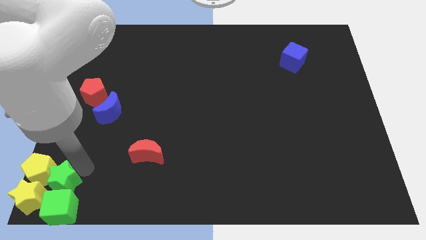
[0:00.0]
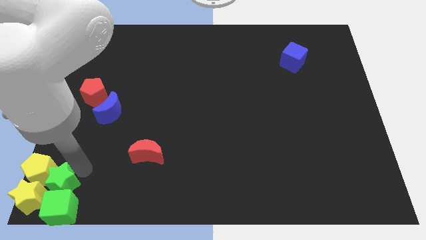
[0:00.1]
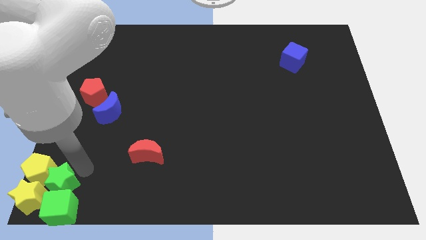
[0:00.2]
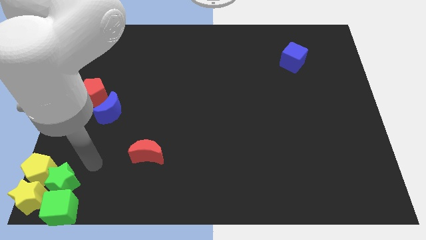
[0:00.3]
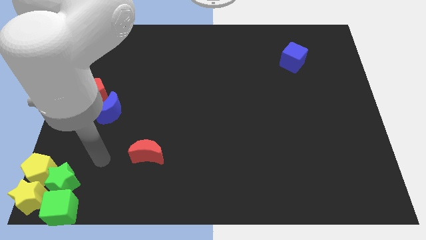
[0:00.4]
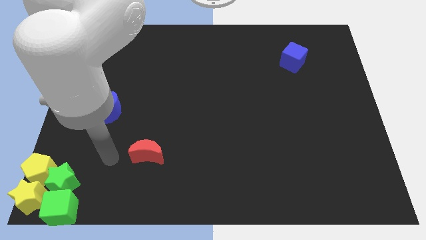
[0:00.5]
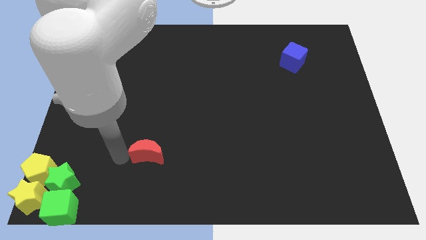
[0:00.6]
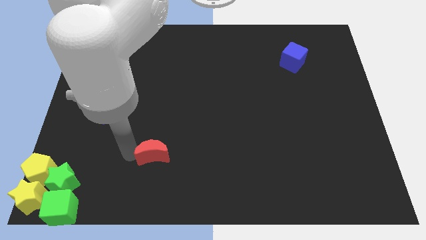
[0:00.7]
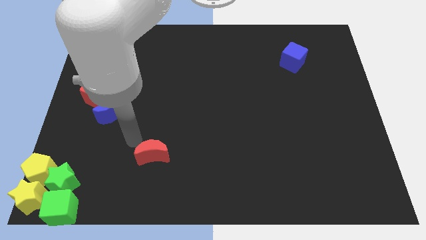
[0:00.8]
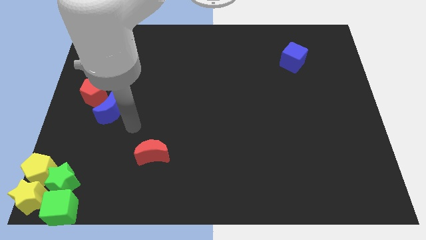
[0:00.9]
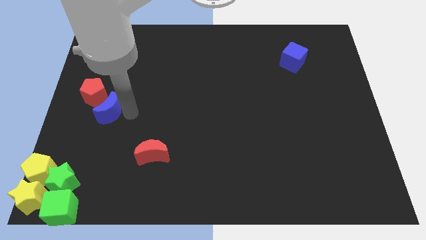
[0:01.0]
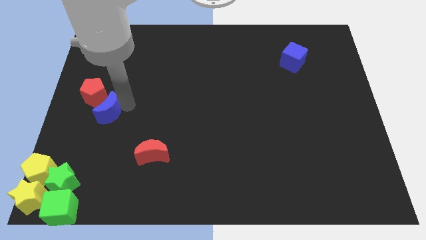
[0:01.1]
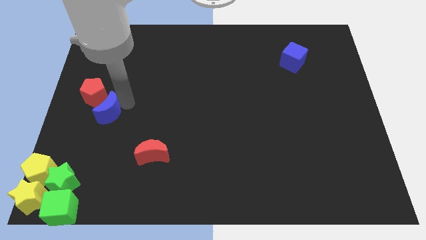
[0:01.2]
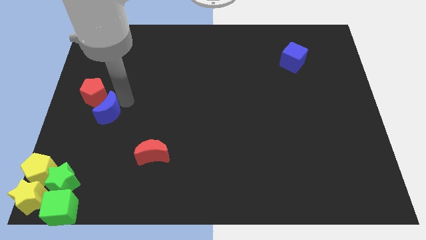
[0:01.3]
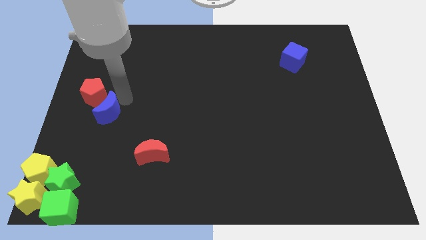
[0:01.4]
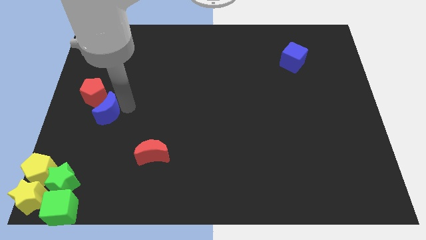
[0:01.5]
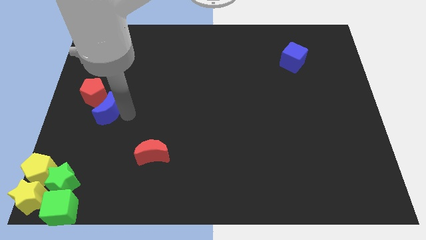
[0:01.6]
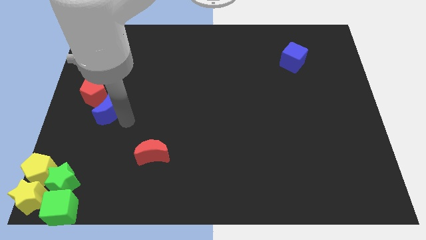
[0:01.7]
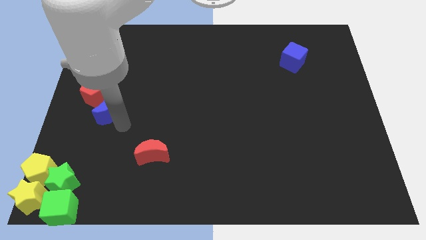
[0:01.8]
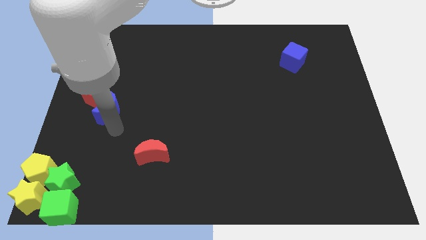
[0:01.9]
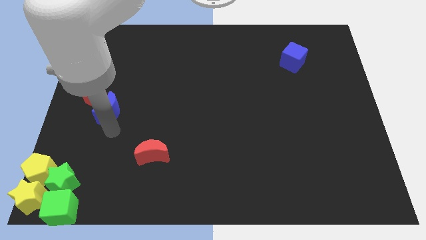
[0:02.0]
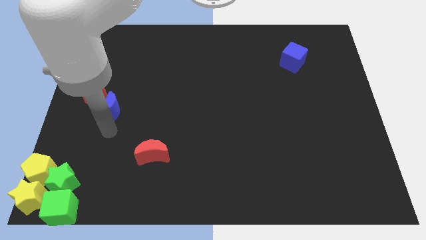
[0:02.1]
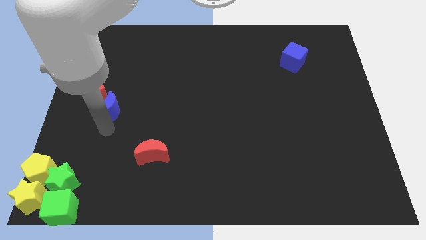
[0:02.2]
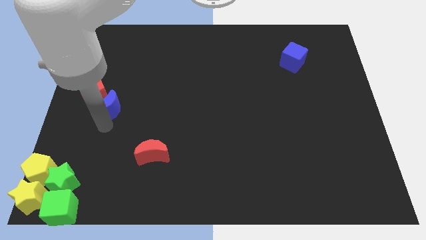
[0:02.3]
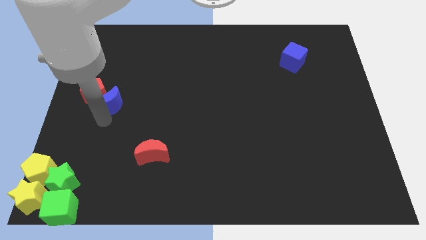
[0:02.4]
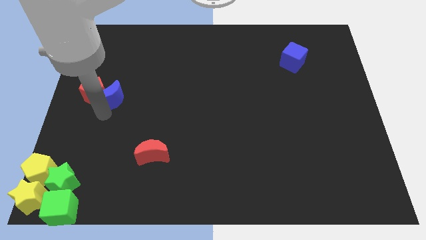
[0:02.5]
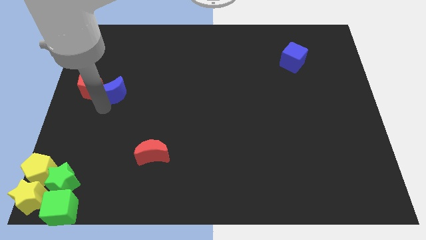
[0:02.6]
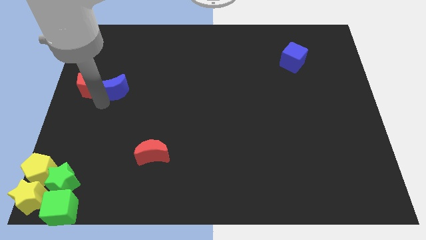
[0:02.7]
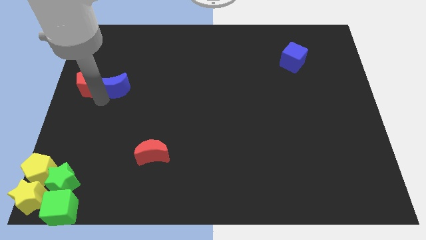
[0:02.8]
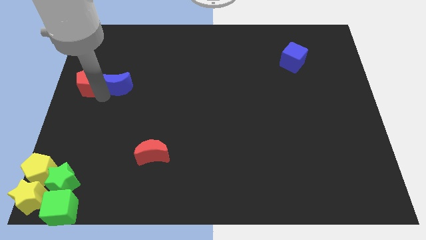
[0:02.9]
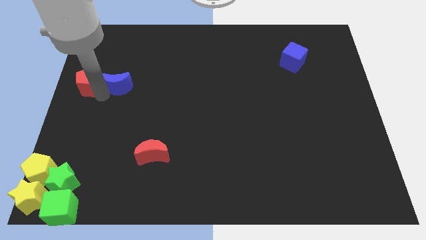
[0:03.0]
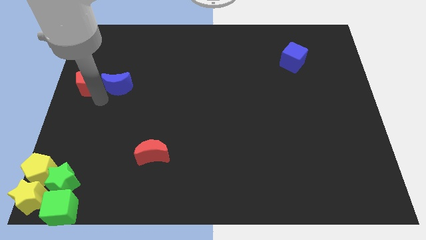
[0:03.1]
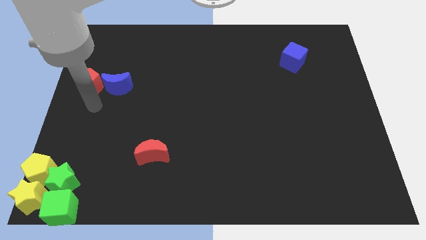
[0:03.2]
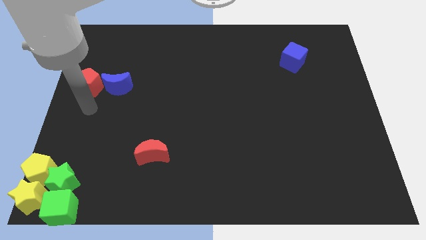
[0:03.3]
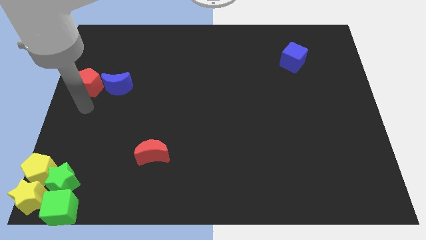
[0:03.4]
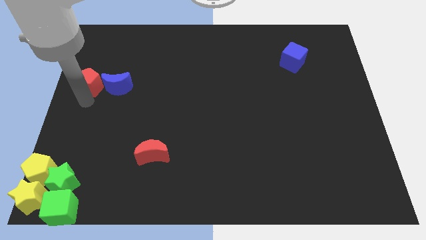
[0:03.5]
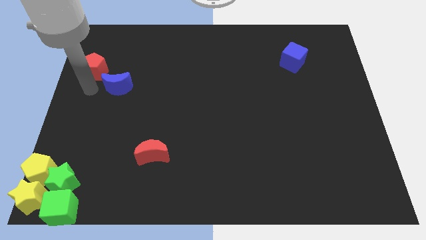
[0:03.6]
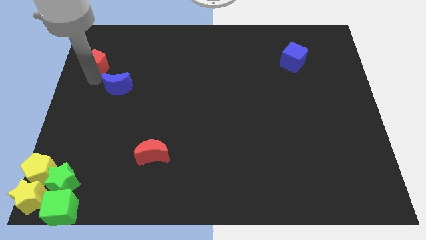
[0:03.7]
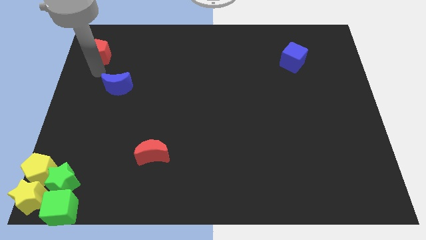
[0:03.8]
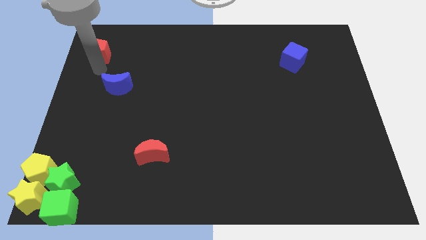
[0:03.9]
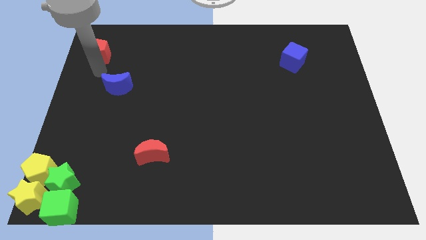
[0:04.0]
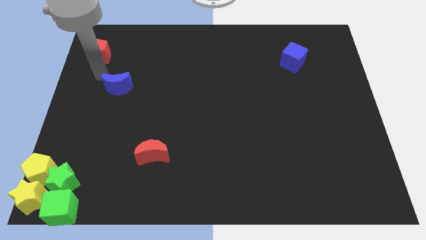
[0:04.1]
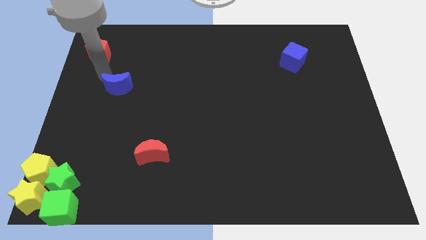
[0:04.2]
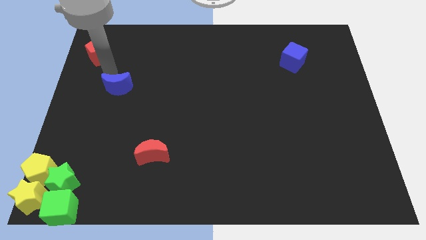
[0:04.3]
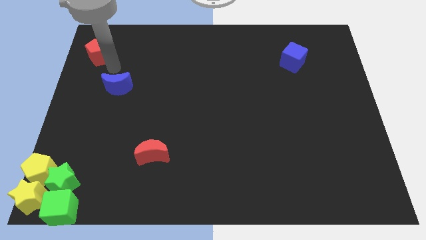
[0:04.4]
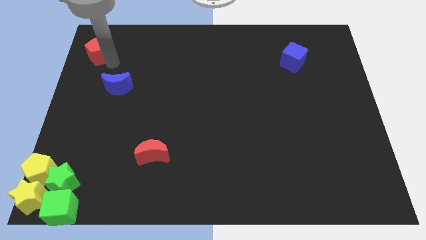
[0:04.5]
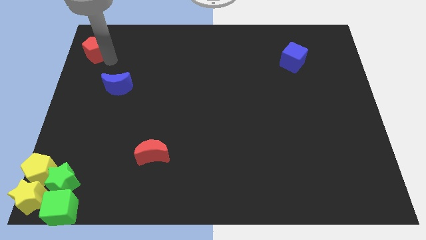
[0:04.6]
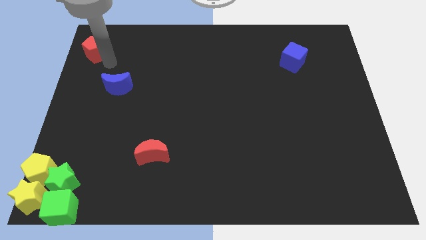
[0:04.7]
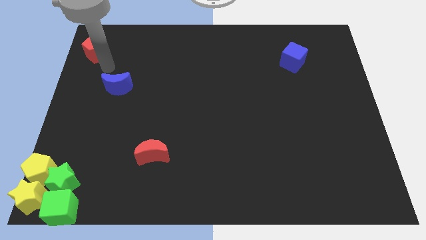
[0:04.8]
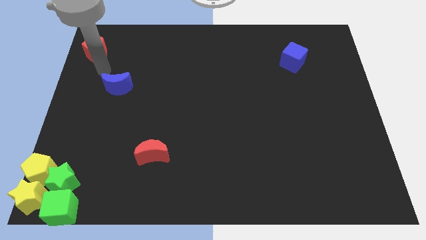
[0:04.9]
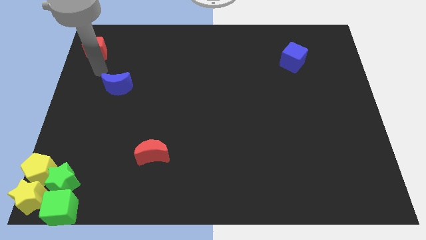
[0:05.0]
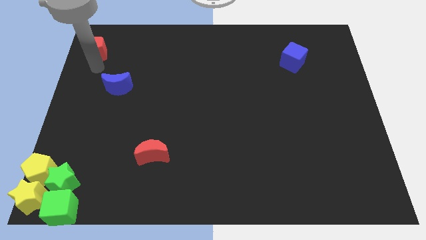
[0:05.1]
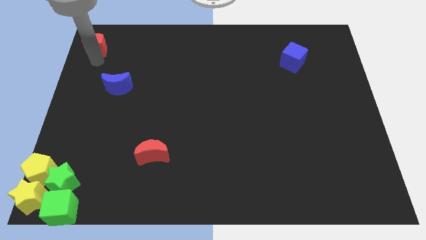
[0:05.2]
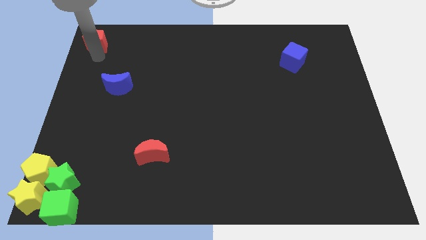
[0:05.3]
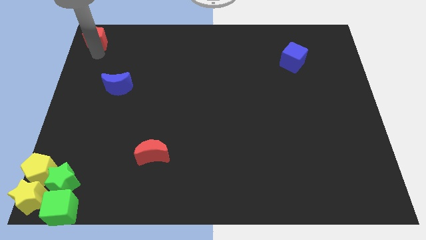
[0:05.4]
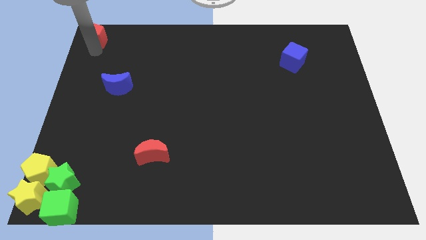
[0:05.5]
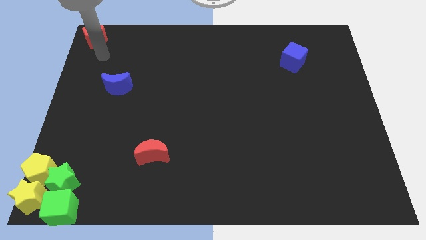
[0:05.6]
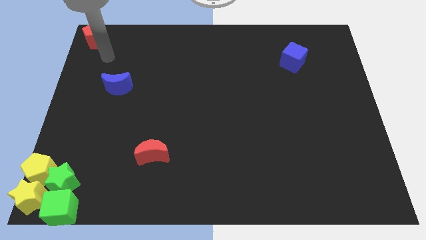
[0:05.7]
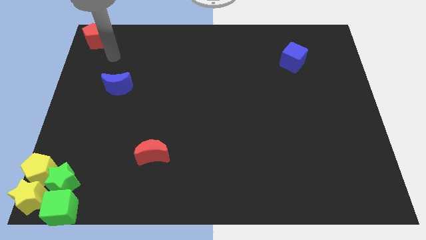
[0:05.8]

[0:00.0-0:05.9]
move the red pentagon to top left corner of the board

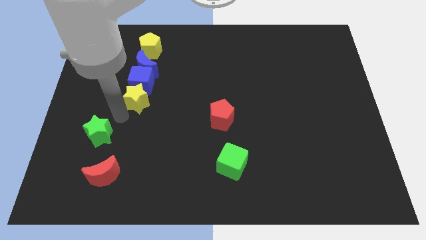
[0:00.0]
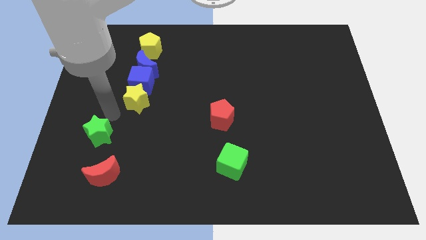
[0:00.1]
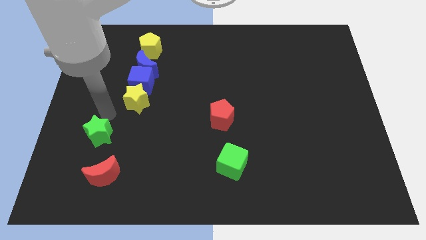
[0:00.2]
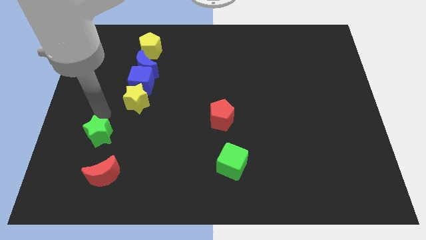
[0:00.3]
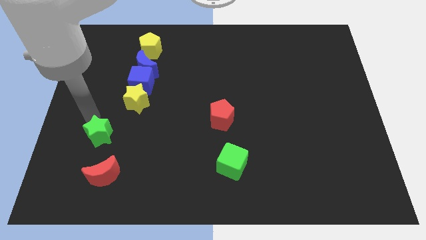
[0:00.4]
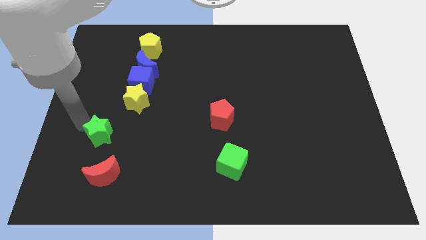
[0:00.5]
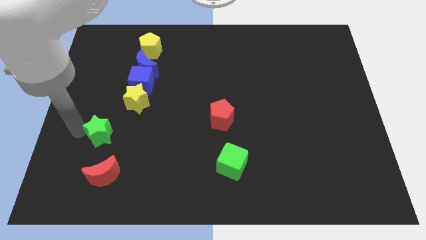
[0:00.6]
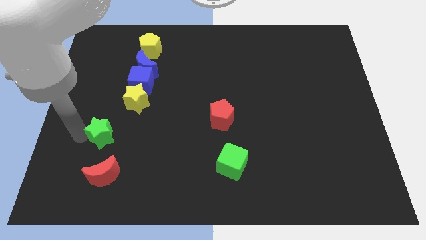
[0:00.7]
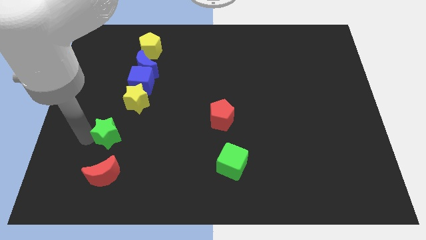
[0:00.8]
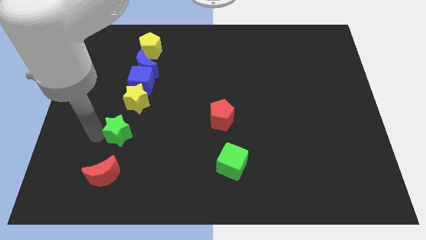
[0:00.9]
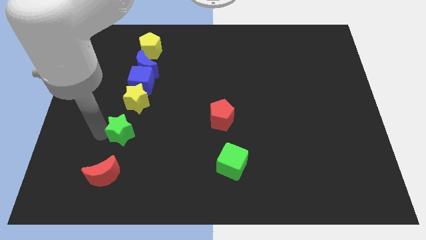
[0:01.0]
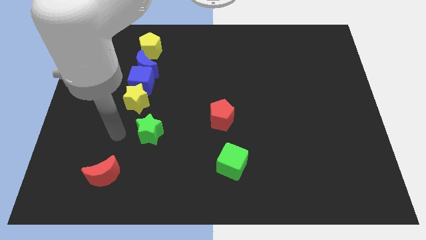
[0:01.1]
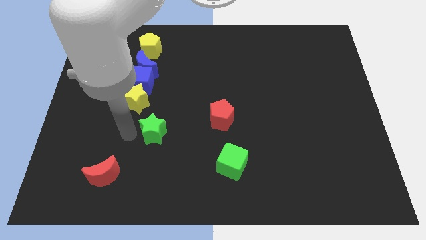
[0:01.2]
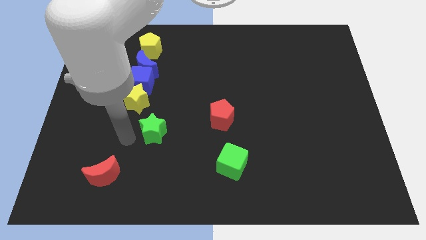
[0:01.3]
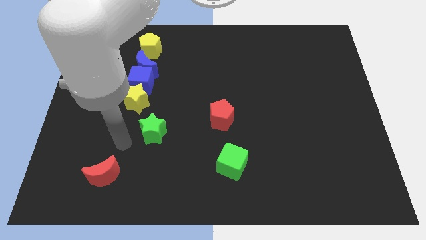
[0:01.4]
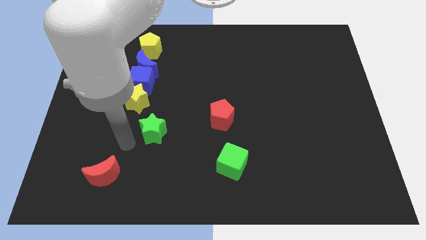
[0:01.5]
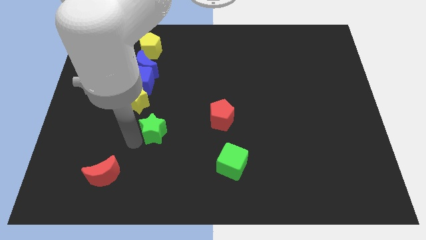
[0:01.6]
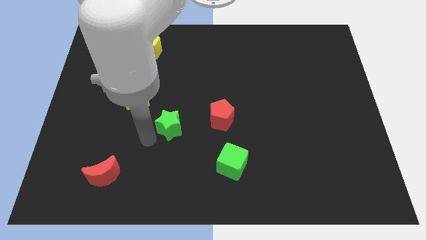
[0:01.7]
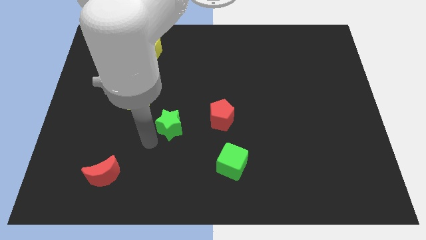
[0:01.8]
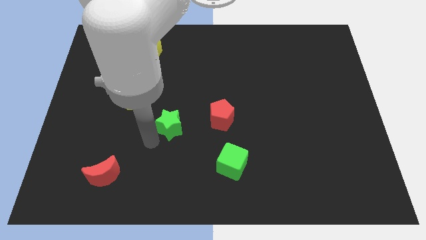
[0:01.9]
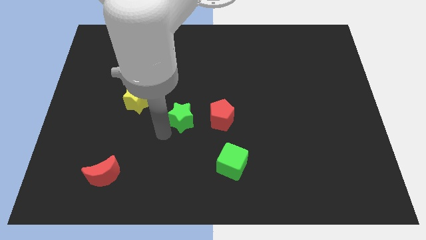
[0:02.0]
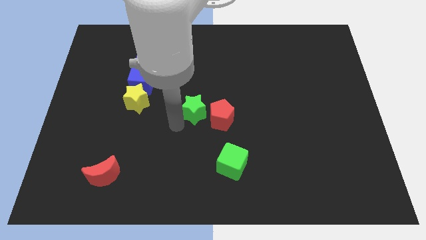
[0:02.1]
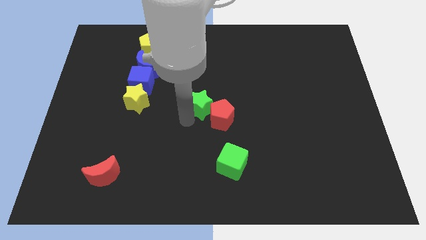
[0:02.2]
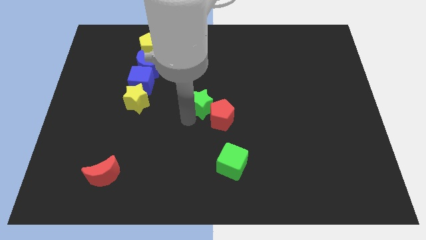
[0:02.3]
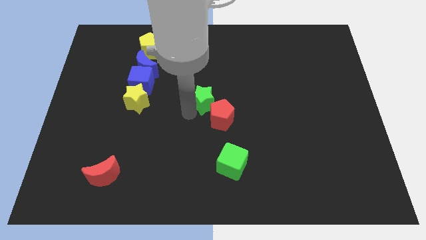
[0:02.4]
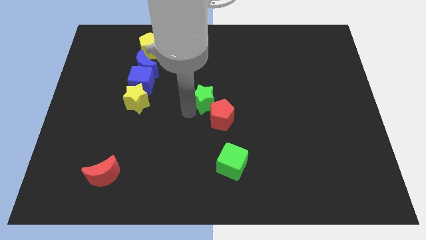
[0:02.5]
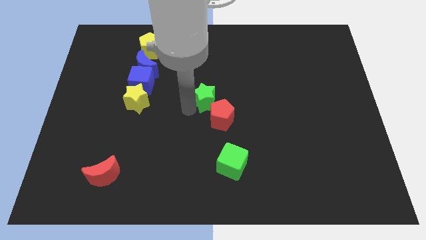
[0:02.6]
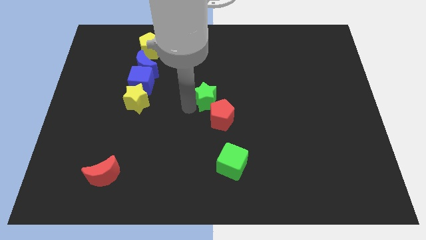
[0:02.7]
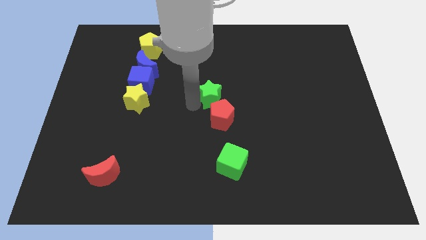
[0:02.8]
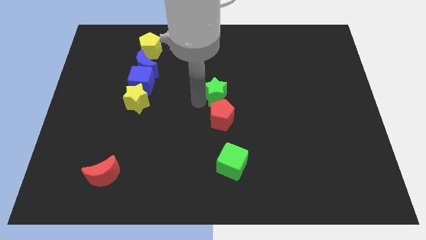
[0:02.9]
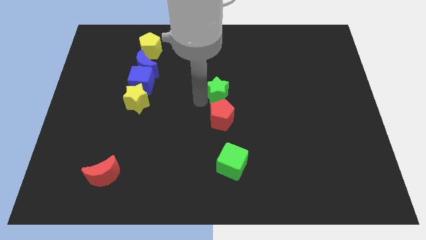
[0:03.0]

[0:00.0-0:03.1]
place green star on top of red pentagon

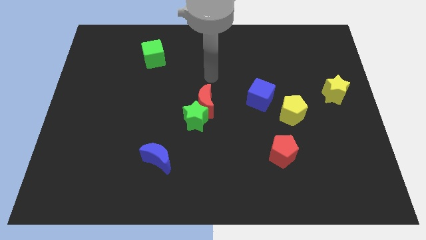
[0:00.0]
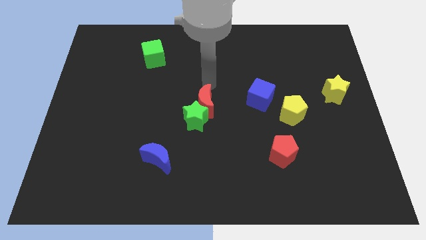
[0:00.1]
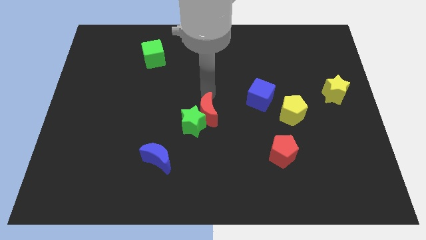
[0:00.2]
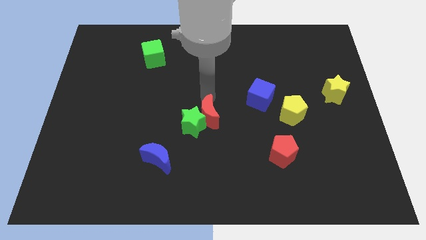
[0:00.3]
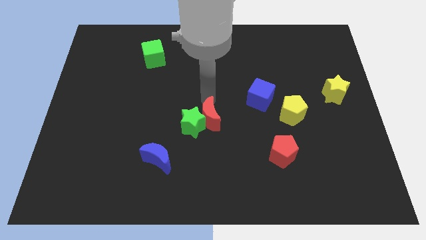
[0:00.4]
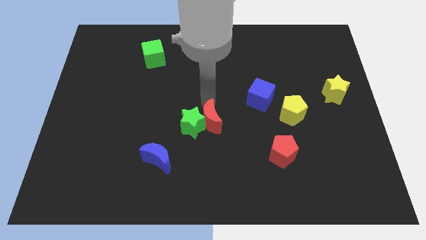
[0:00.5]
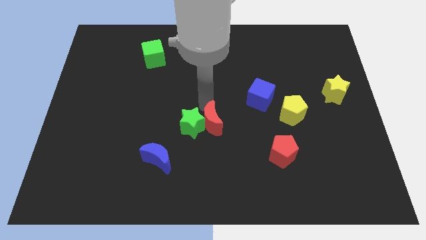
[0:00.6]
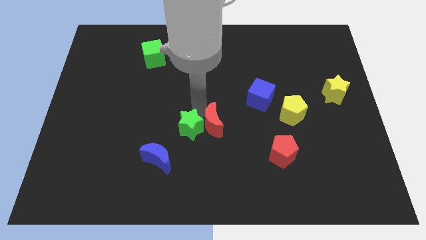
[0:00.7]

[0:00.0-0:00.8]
push the red crecent downwards slightly
